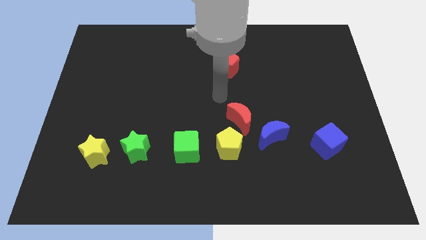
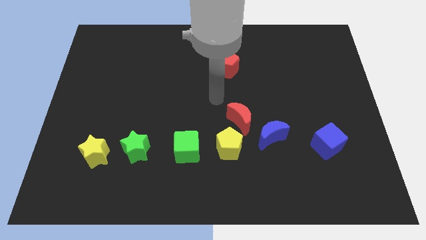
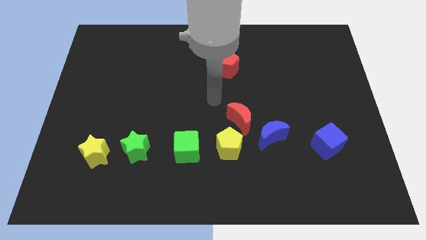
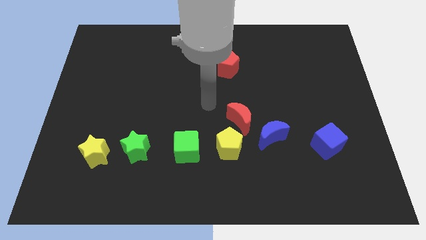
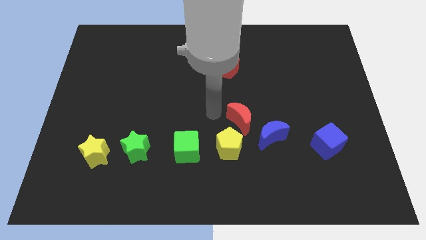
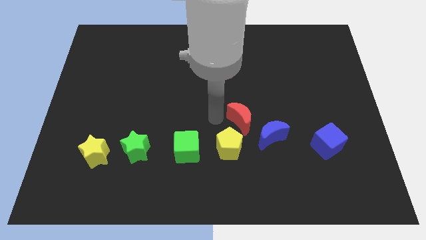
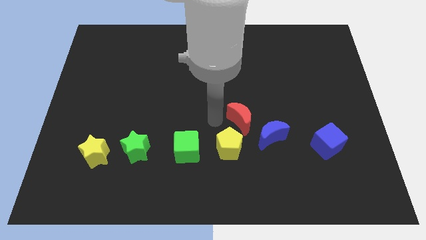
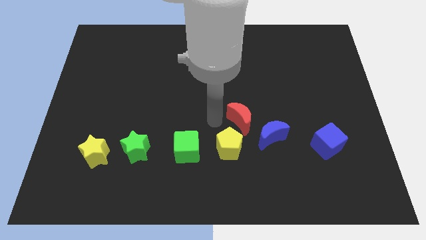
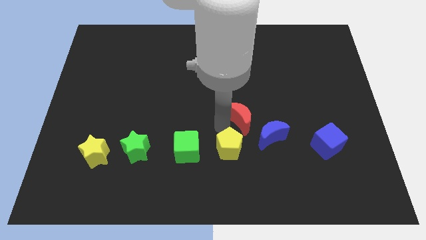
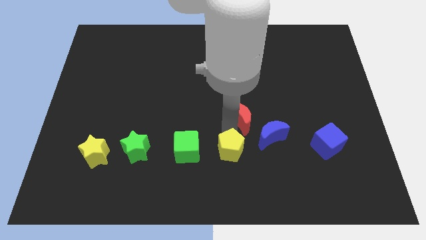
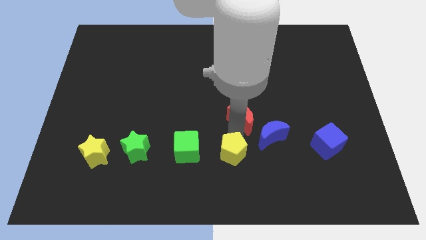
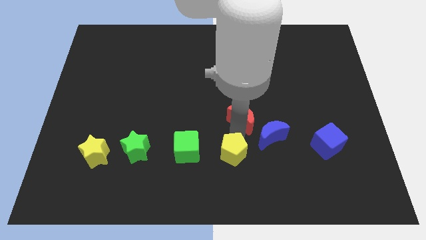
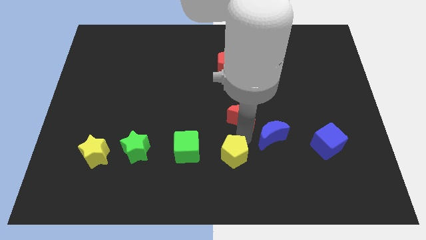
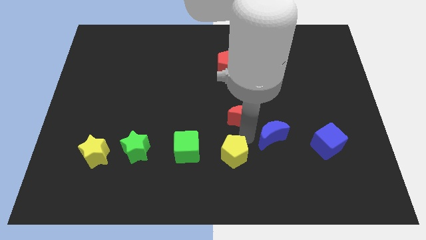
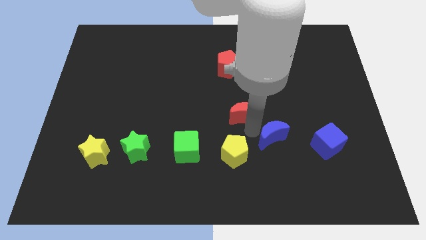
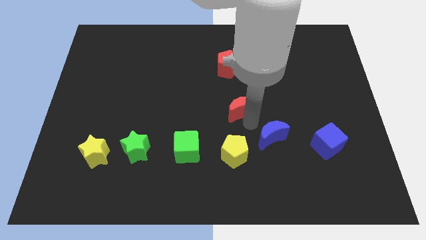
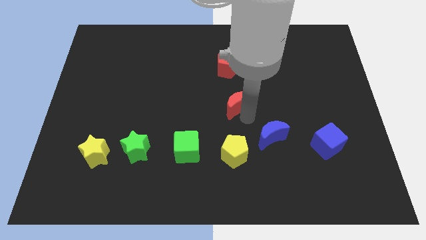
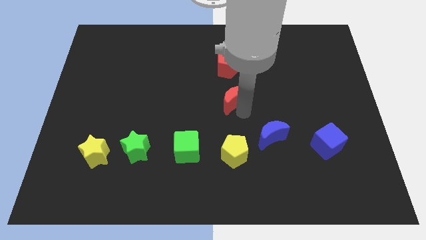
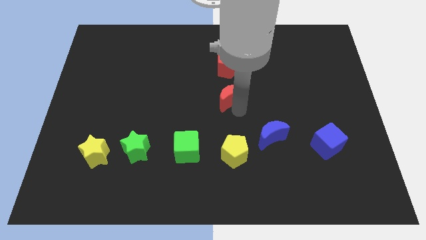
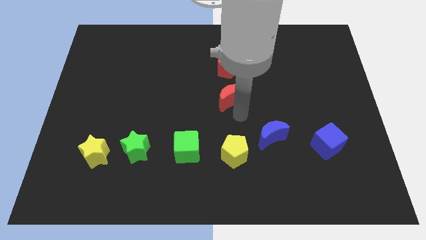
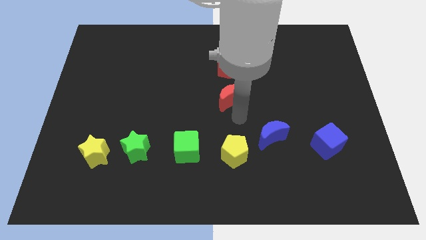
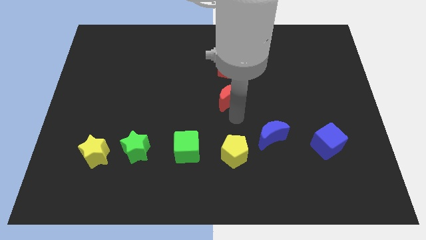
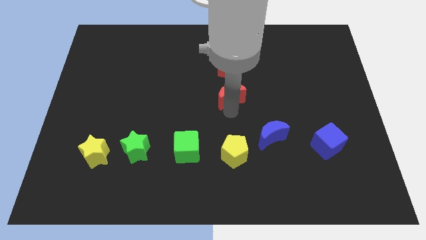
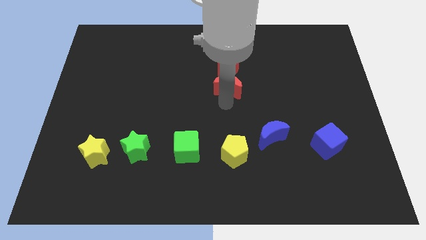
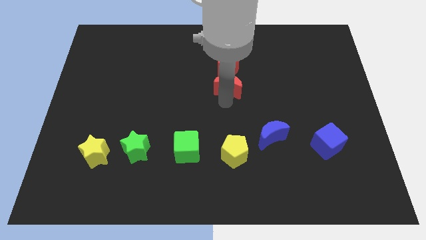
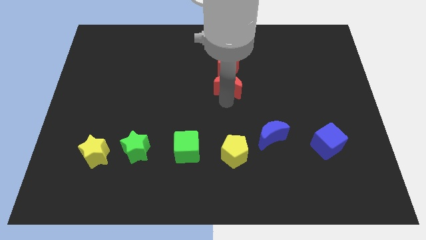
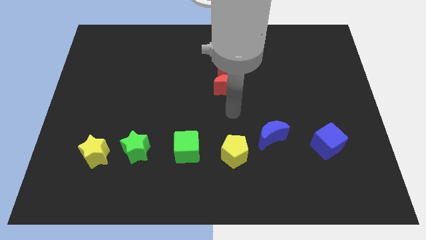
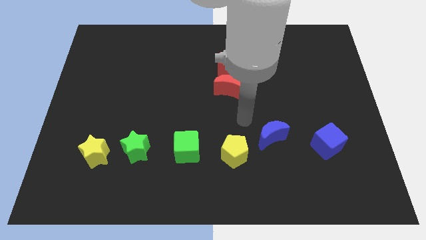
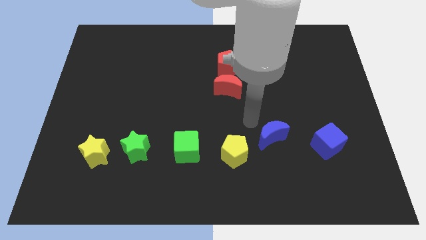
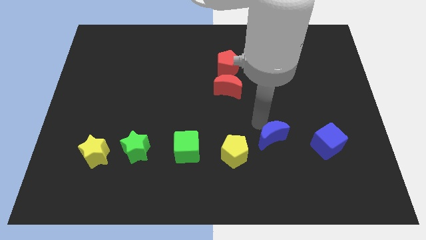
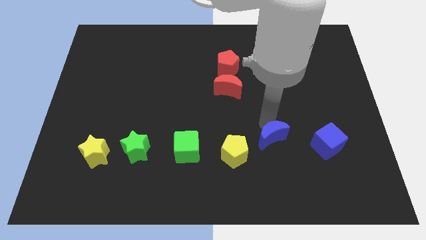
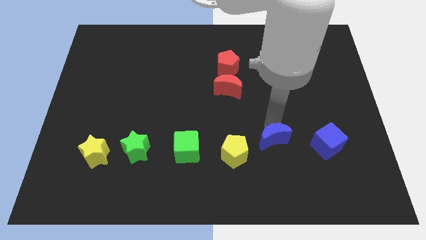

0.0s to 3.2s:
push the red crescent to the bottom of the red pentagon

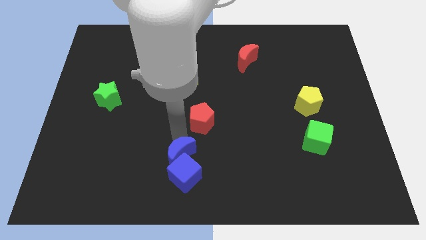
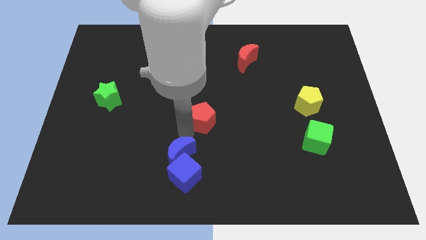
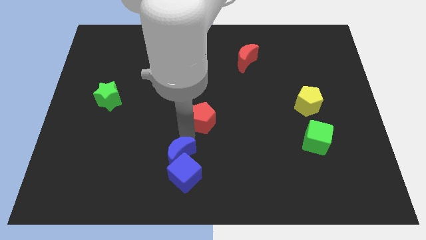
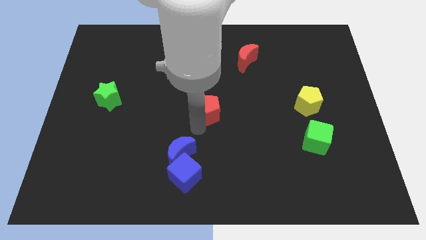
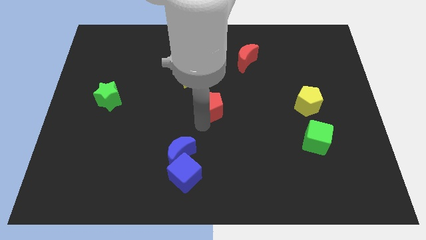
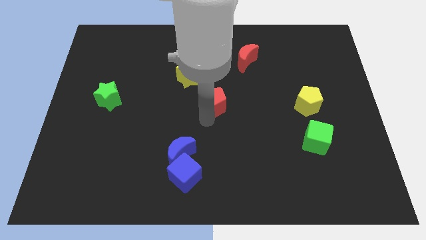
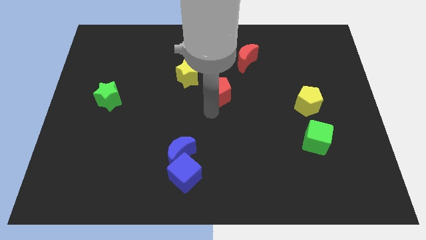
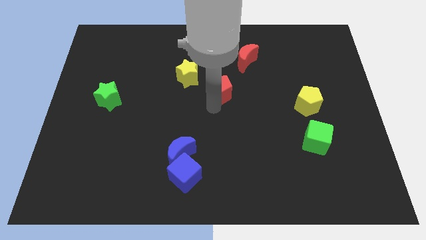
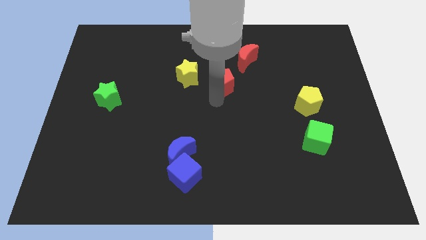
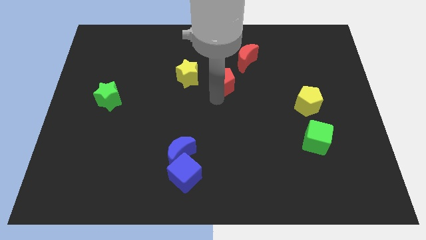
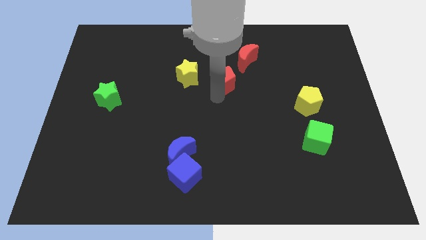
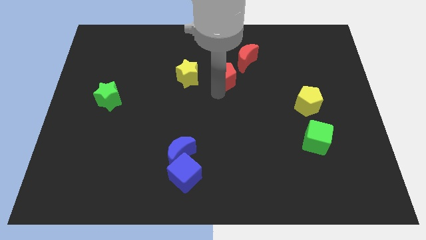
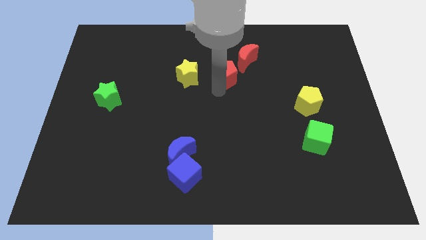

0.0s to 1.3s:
move the red pentagon towards the red crescent

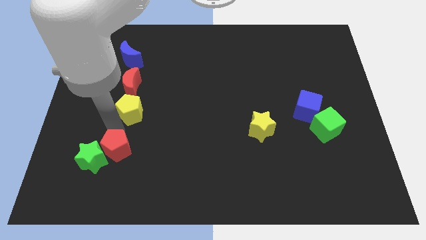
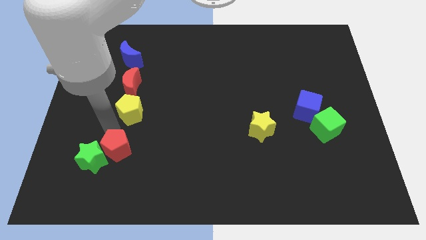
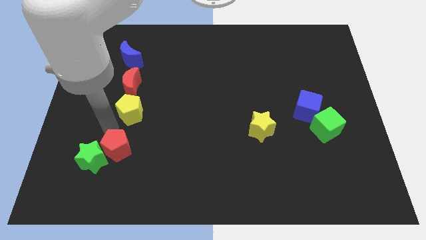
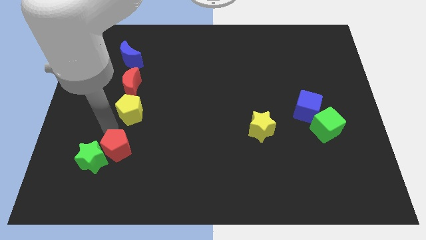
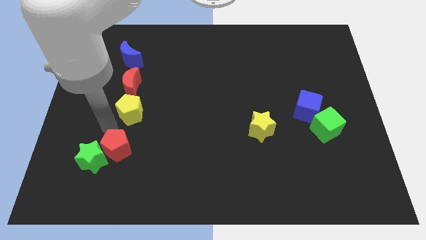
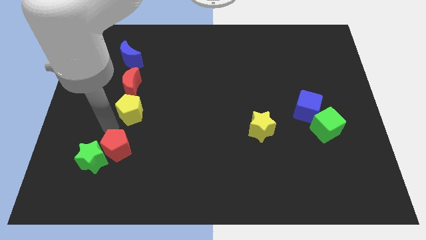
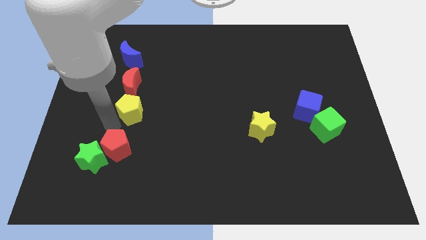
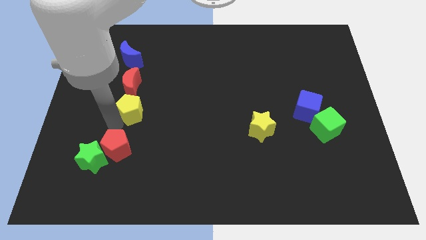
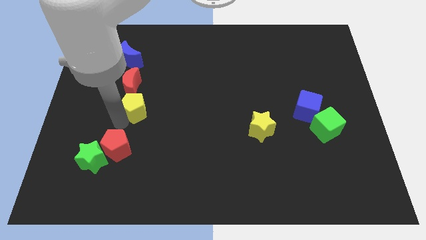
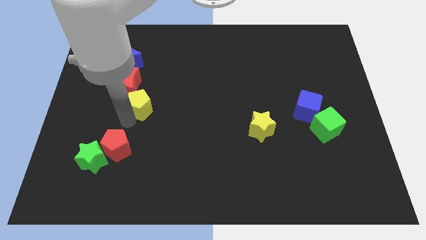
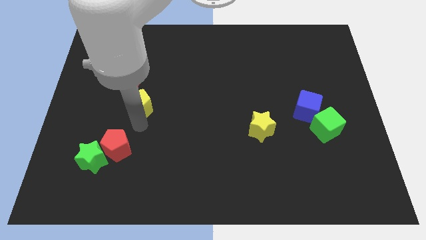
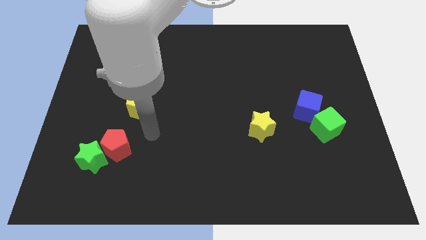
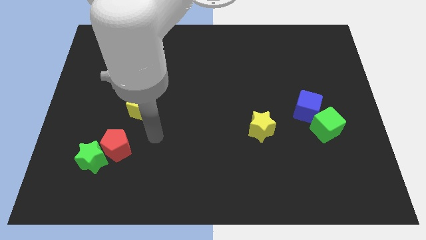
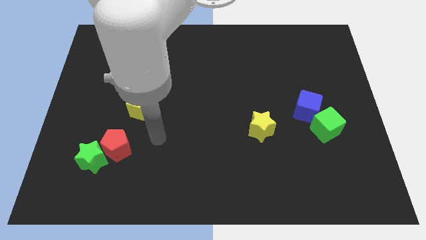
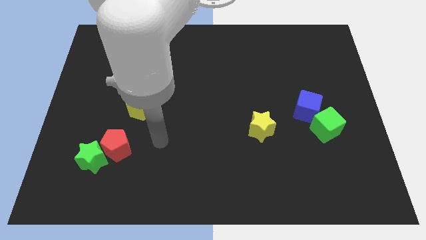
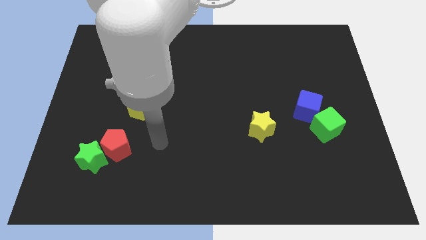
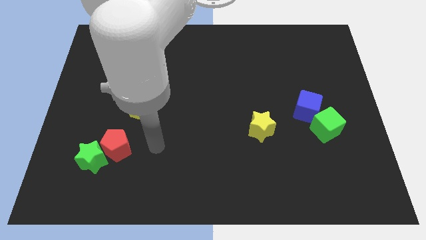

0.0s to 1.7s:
move yellow pentagon slightly up

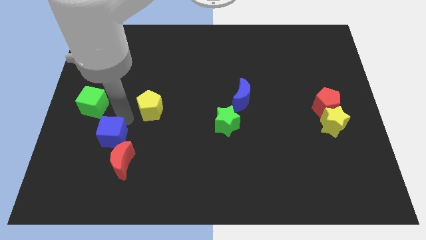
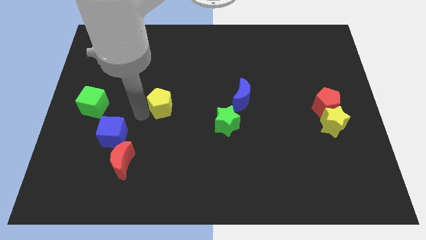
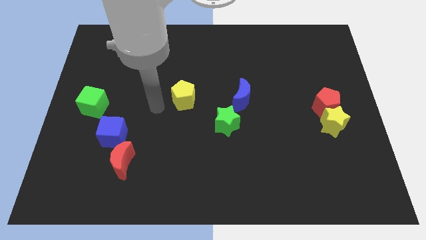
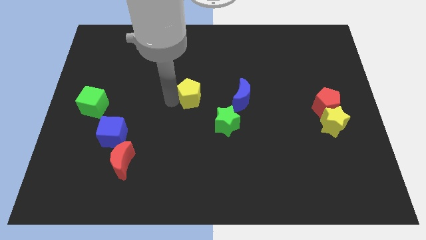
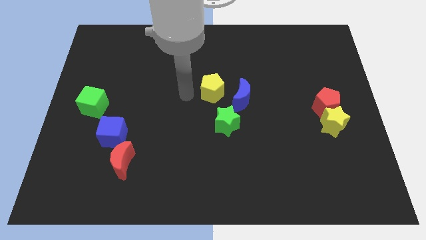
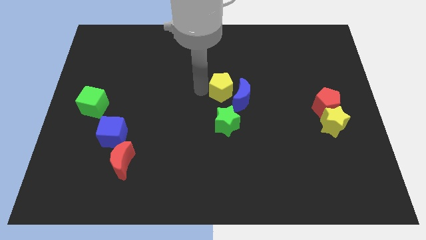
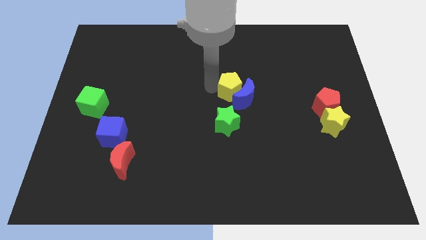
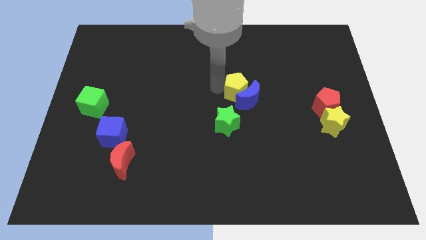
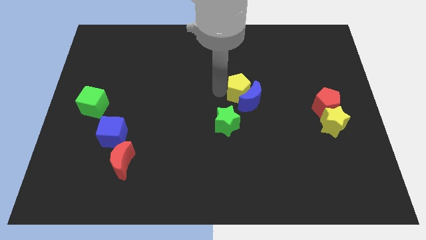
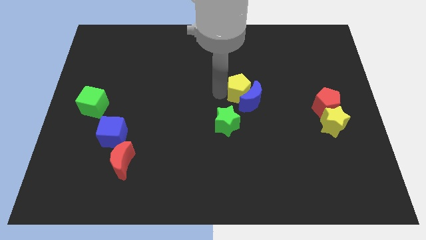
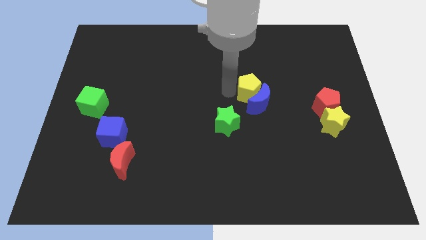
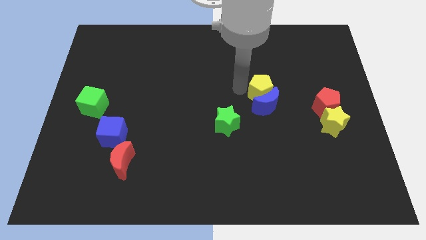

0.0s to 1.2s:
push the yellow pentagon into the blue moon

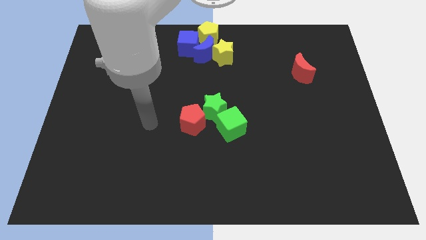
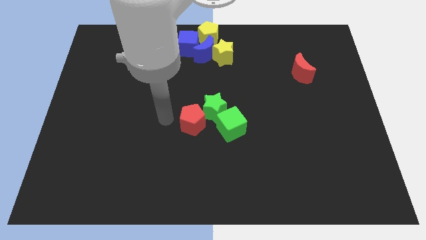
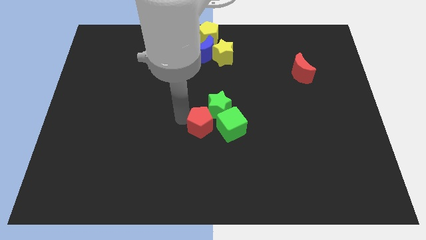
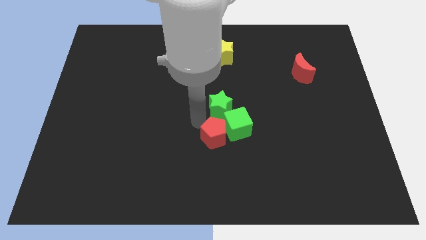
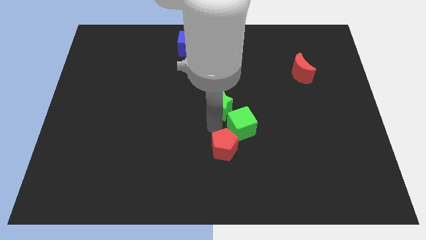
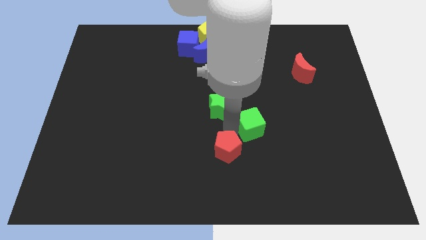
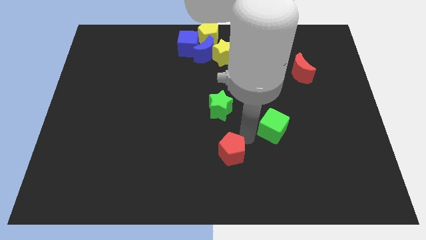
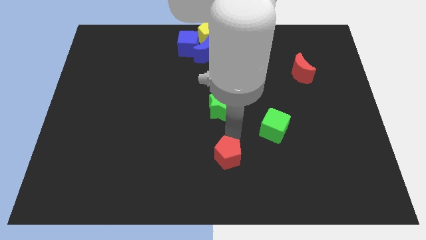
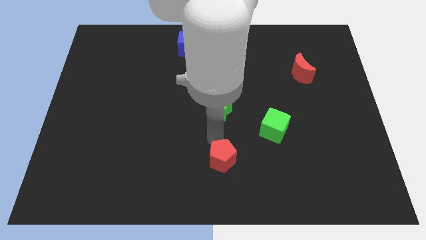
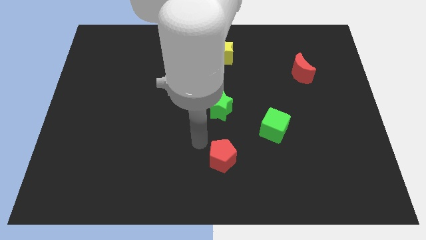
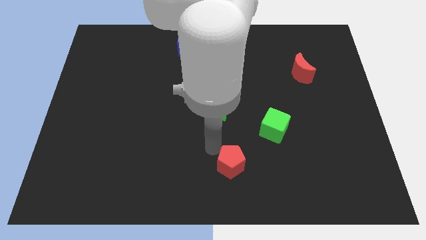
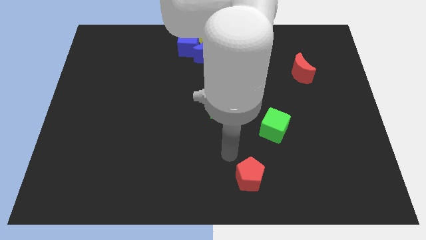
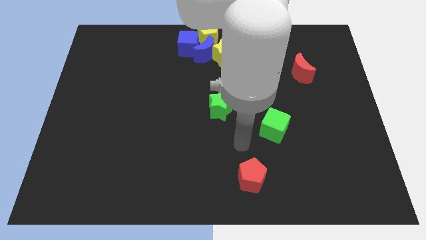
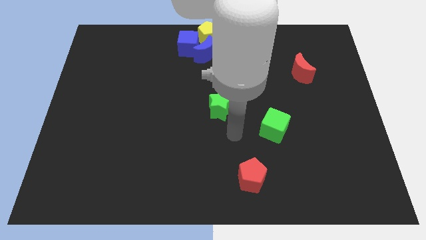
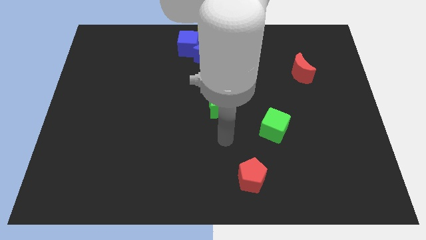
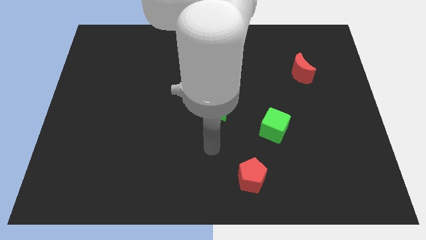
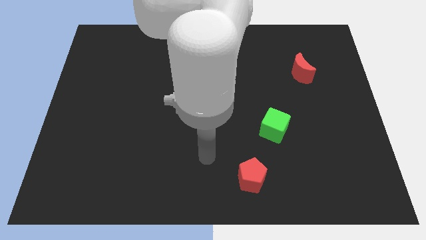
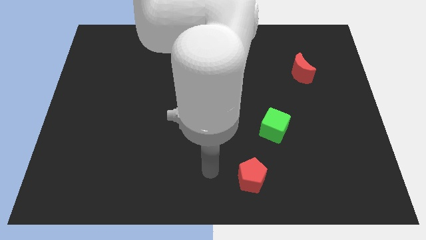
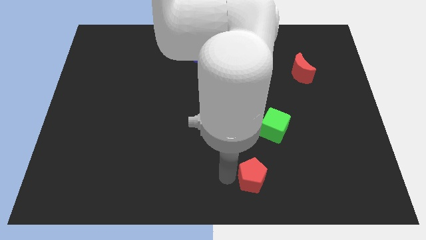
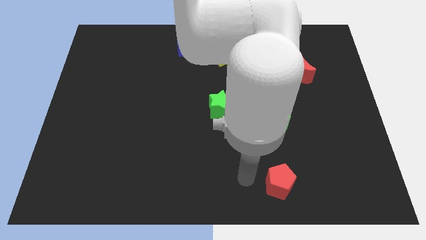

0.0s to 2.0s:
separate green cube and red pentagon from the green star
